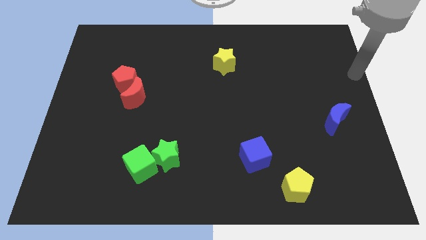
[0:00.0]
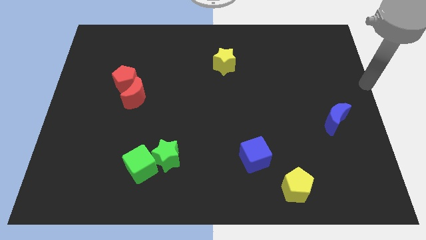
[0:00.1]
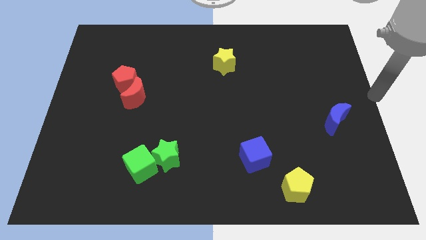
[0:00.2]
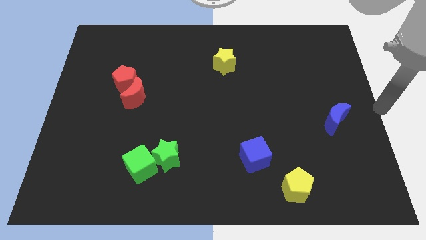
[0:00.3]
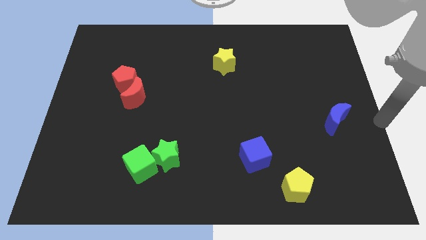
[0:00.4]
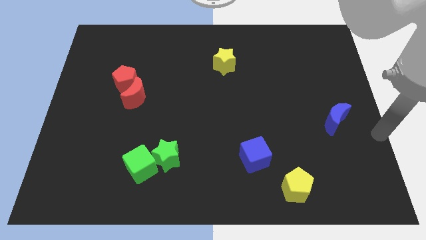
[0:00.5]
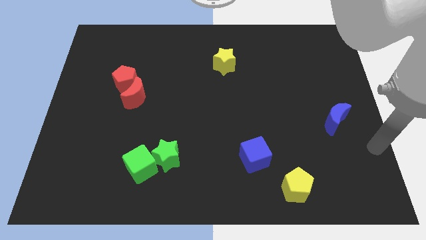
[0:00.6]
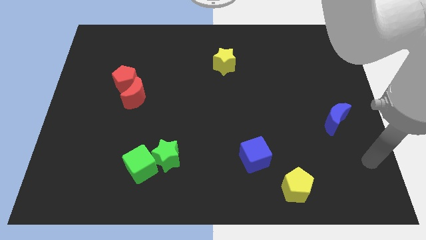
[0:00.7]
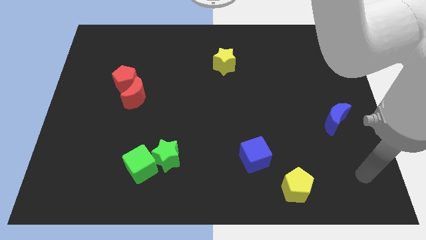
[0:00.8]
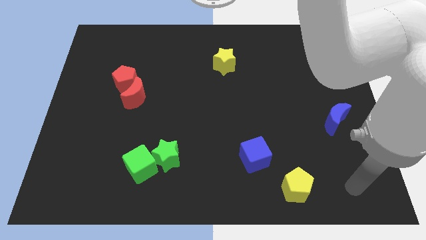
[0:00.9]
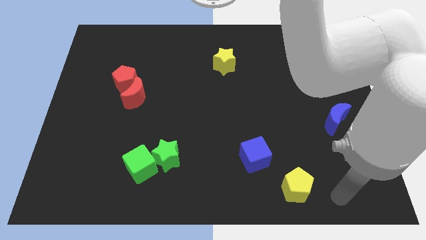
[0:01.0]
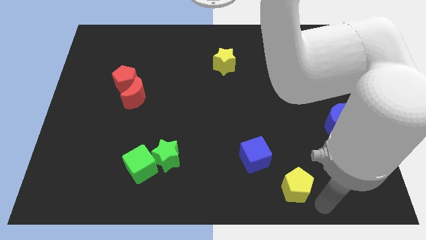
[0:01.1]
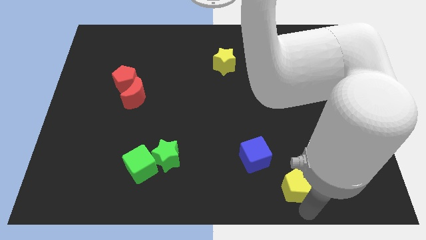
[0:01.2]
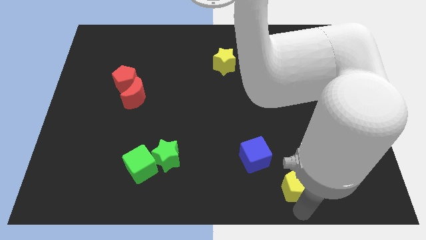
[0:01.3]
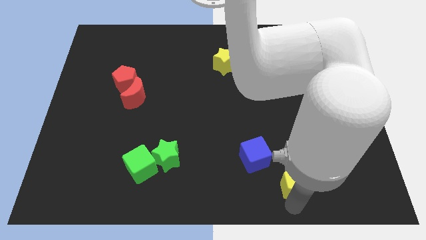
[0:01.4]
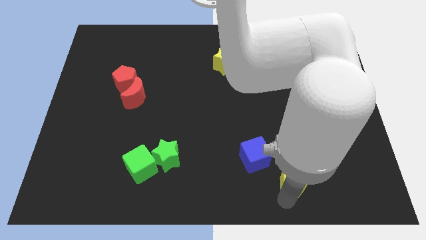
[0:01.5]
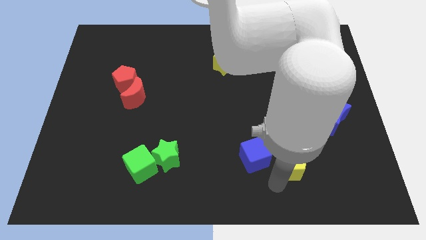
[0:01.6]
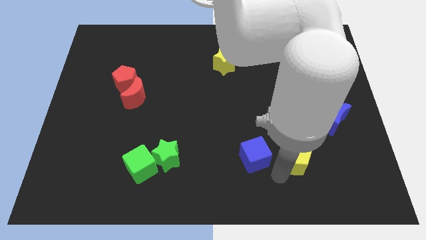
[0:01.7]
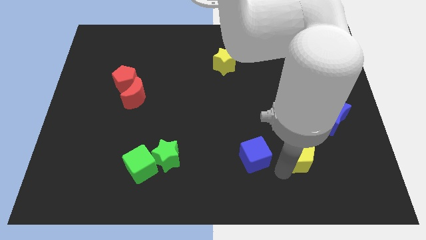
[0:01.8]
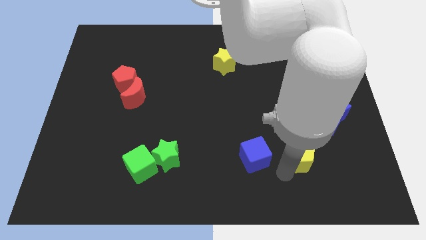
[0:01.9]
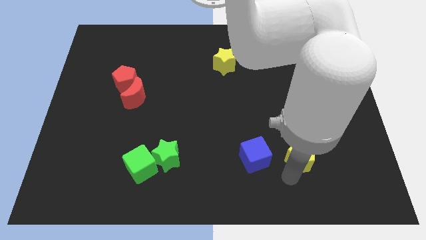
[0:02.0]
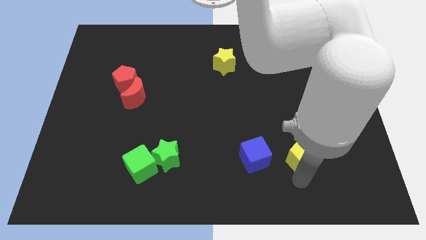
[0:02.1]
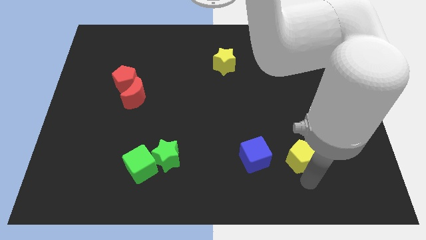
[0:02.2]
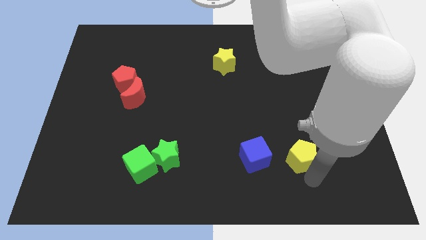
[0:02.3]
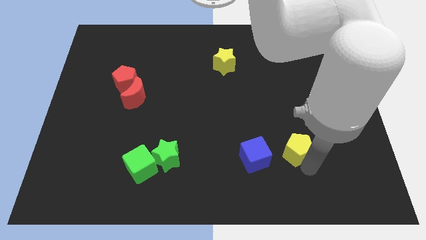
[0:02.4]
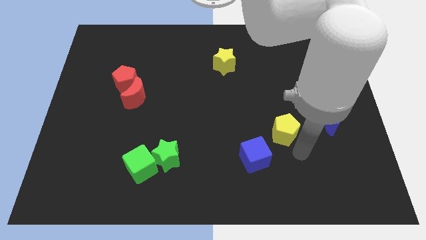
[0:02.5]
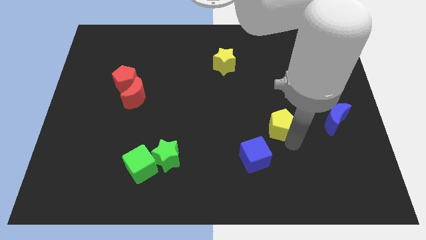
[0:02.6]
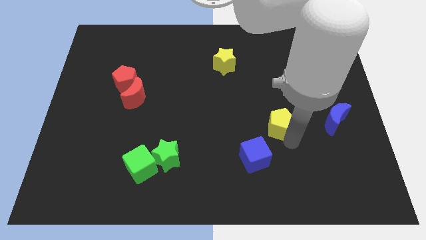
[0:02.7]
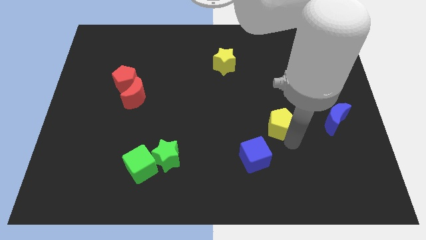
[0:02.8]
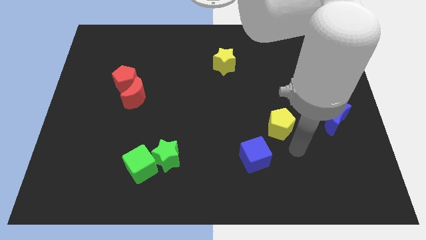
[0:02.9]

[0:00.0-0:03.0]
push yellow pentagon to the top

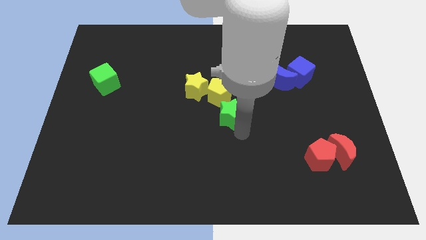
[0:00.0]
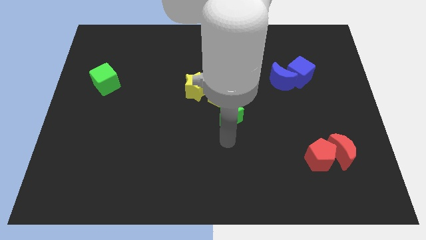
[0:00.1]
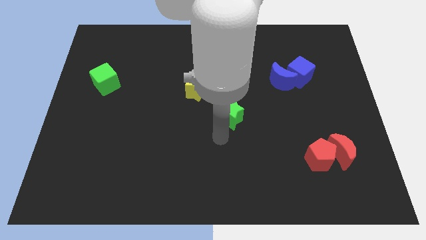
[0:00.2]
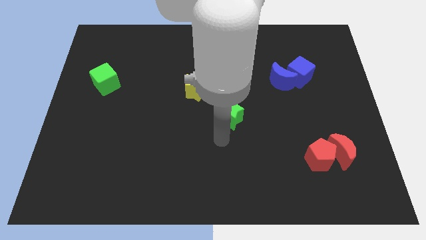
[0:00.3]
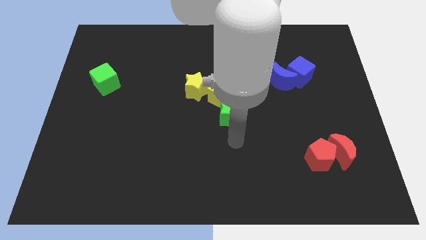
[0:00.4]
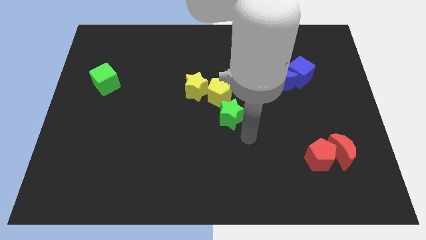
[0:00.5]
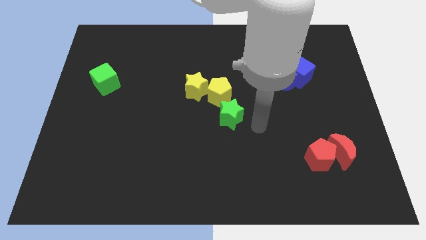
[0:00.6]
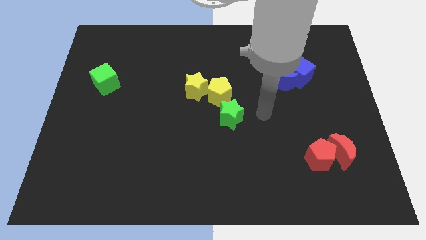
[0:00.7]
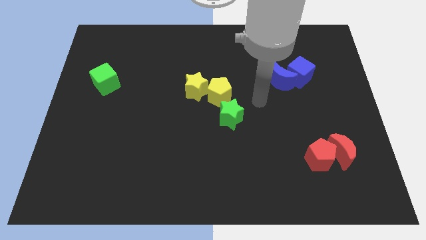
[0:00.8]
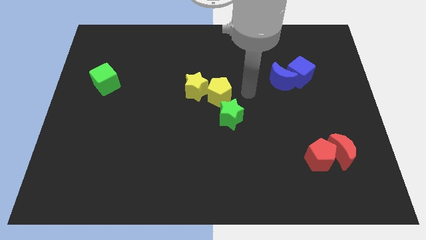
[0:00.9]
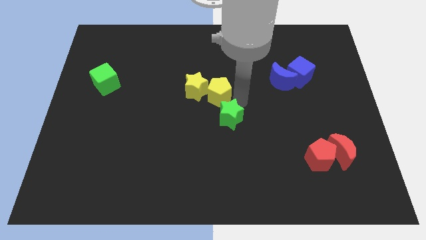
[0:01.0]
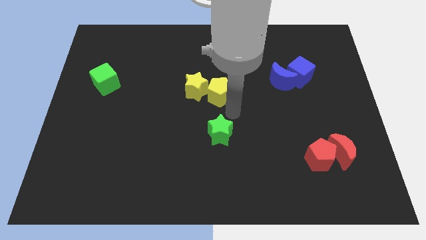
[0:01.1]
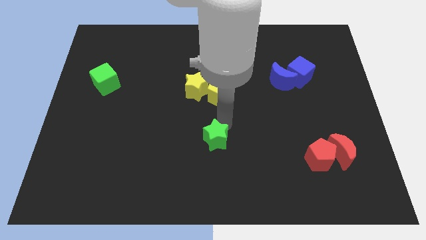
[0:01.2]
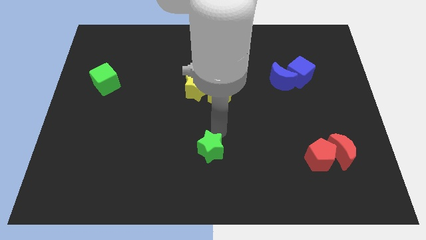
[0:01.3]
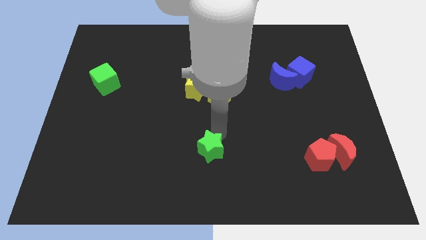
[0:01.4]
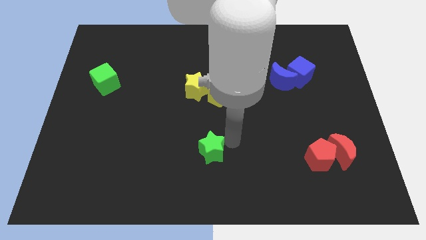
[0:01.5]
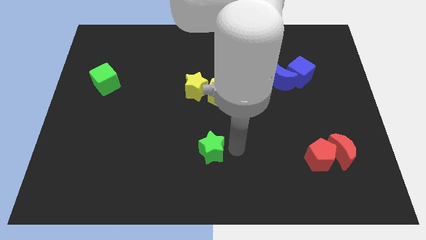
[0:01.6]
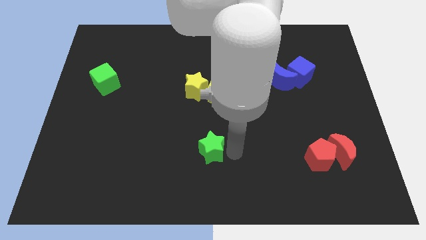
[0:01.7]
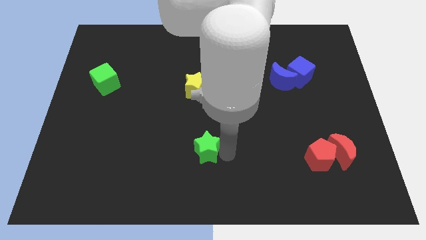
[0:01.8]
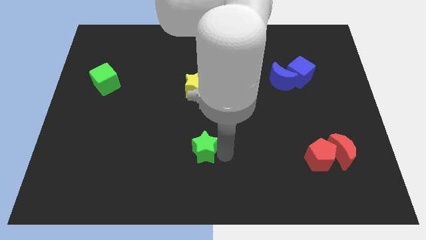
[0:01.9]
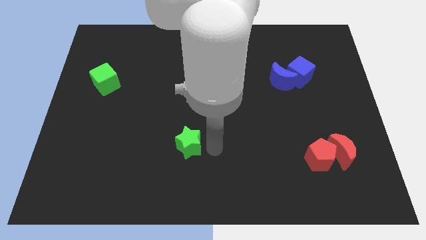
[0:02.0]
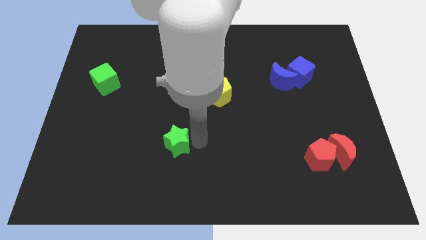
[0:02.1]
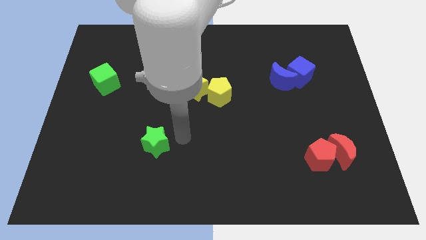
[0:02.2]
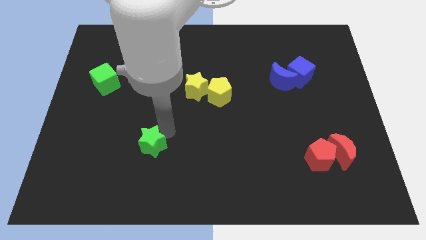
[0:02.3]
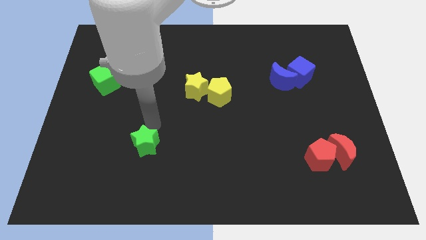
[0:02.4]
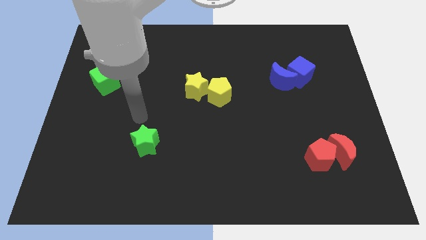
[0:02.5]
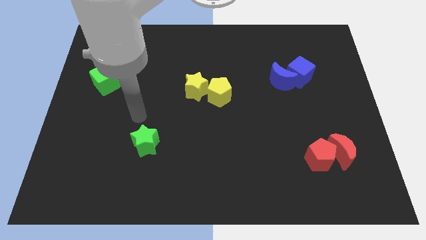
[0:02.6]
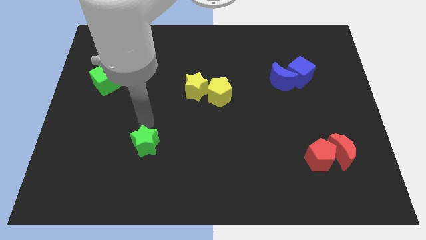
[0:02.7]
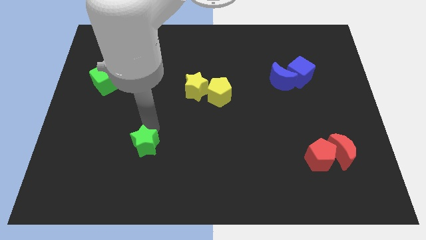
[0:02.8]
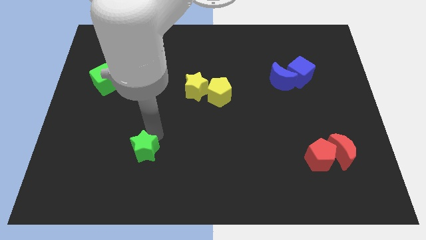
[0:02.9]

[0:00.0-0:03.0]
push the green star diagonal to the green cube

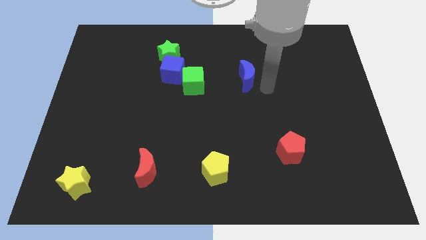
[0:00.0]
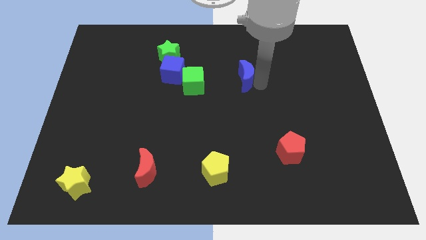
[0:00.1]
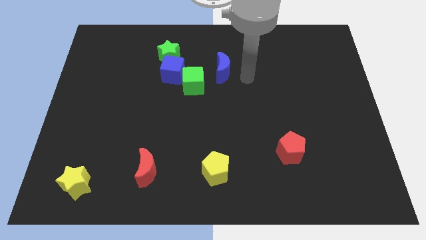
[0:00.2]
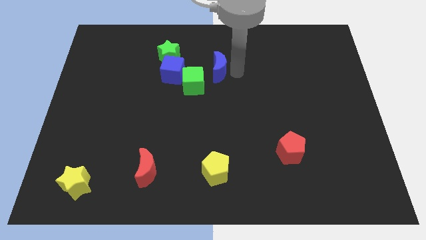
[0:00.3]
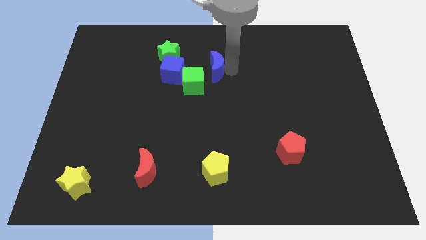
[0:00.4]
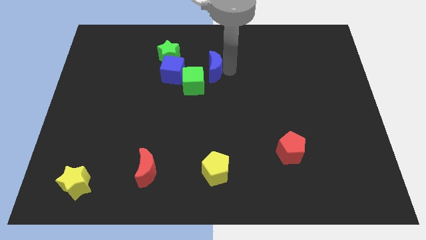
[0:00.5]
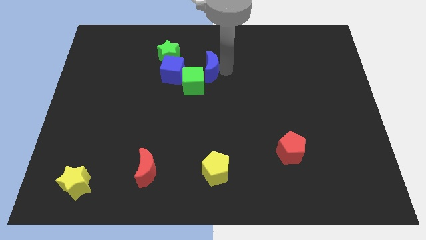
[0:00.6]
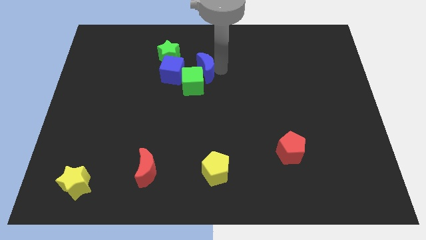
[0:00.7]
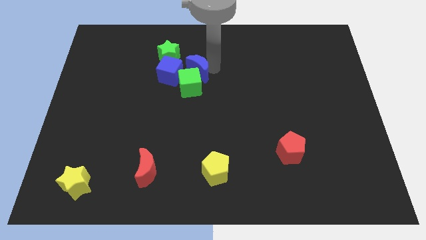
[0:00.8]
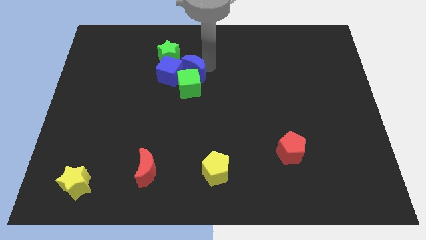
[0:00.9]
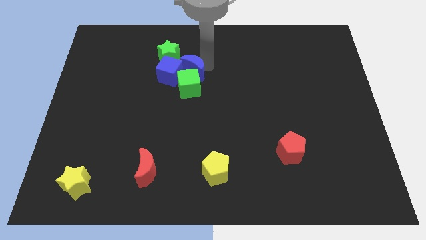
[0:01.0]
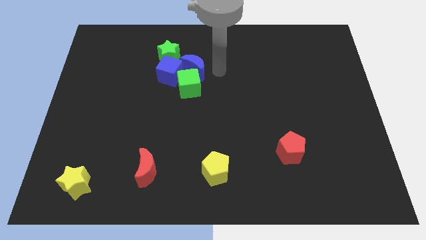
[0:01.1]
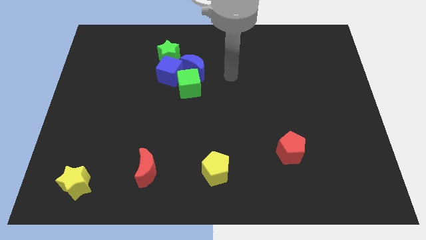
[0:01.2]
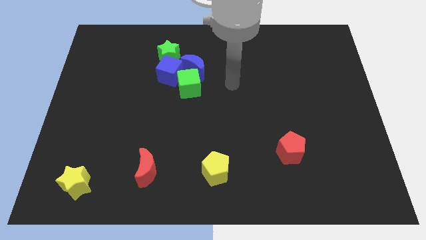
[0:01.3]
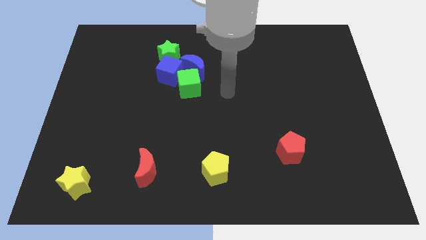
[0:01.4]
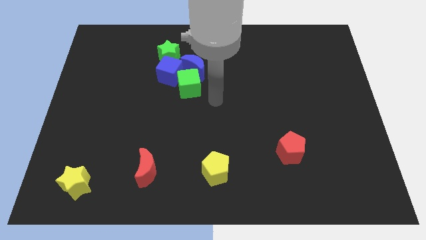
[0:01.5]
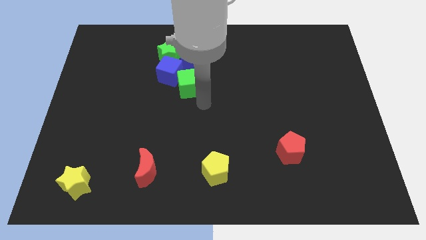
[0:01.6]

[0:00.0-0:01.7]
place the blue moon to the right side of blue cube

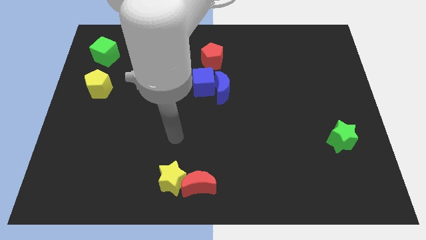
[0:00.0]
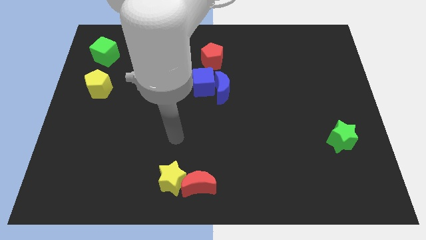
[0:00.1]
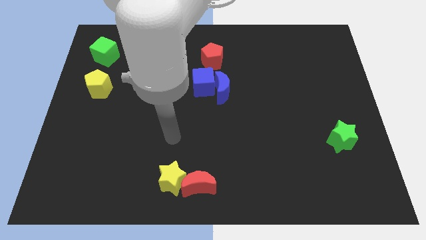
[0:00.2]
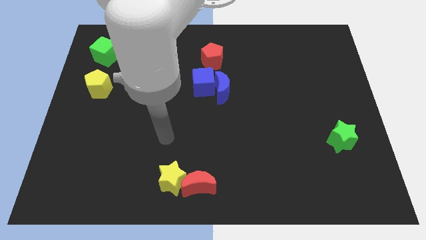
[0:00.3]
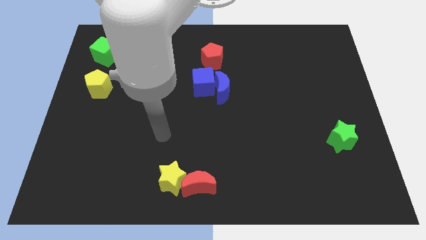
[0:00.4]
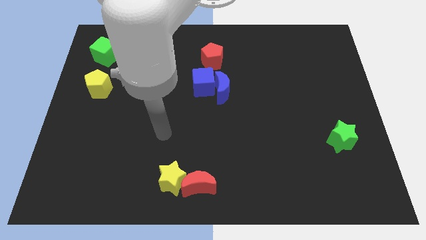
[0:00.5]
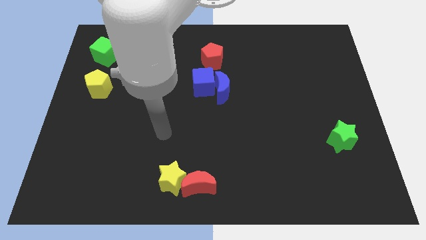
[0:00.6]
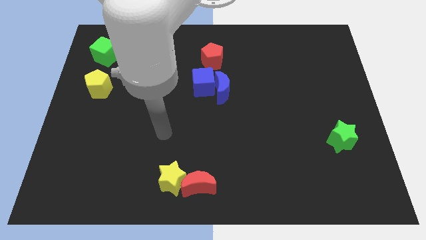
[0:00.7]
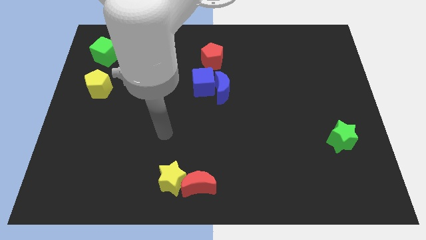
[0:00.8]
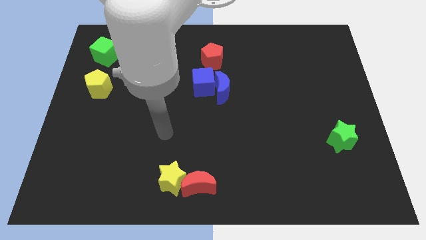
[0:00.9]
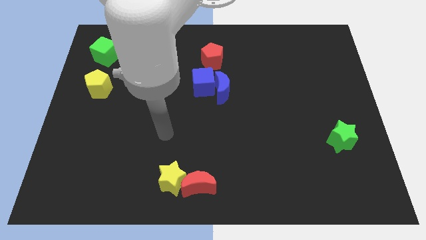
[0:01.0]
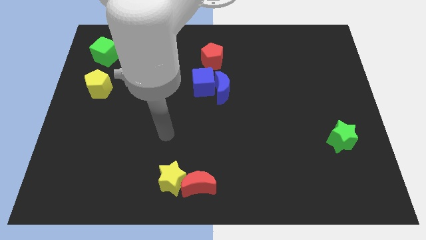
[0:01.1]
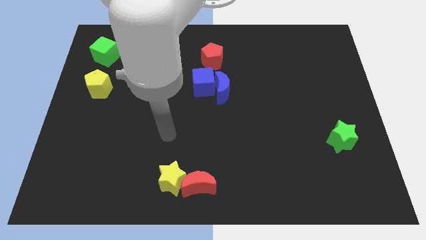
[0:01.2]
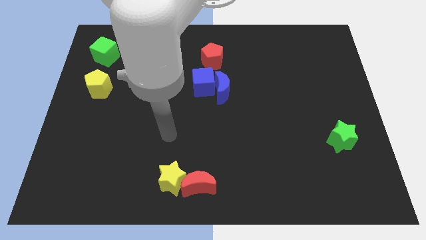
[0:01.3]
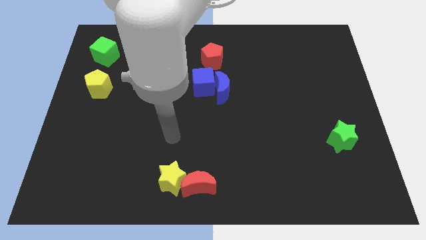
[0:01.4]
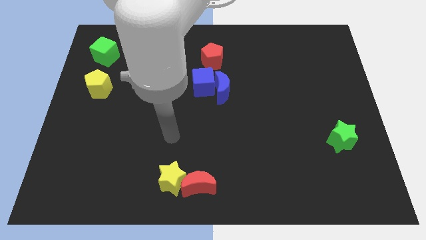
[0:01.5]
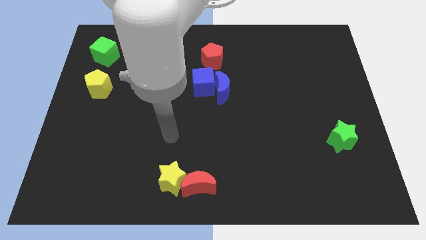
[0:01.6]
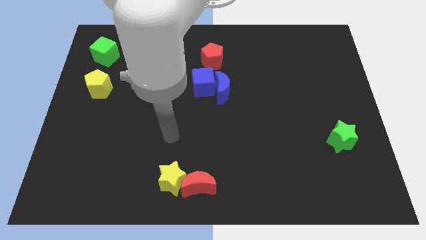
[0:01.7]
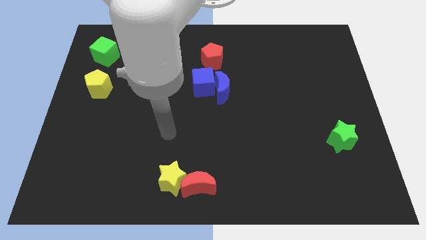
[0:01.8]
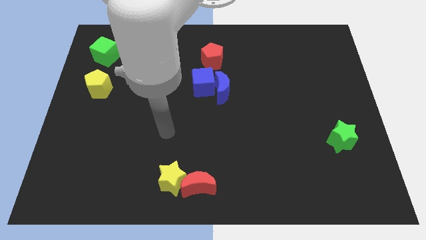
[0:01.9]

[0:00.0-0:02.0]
point your arm at the top side of the yellow star
